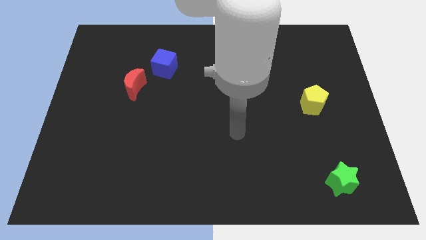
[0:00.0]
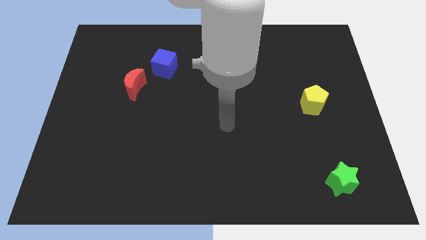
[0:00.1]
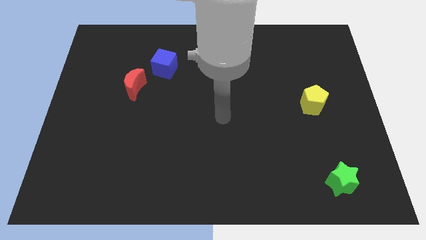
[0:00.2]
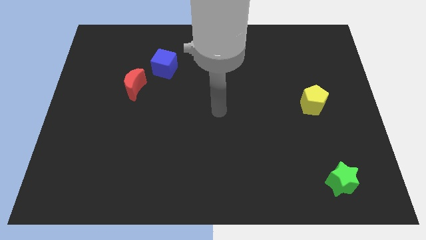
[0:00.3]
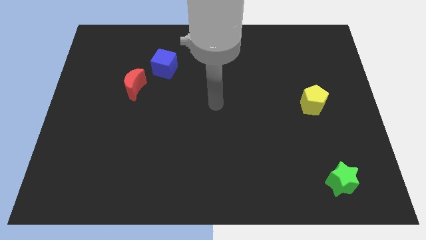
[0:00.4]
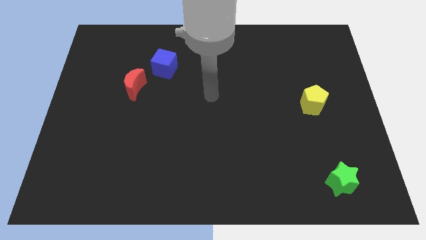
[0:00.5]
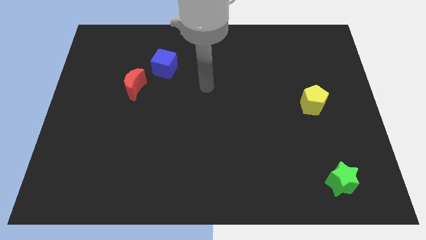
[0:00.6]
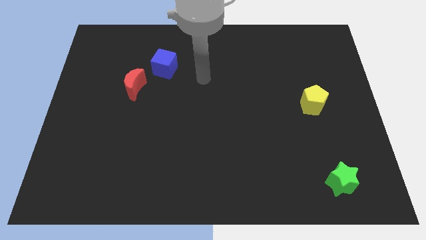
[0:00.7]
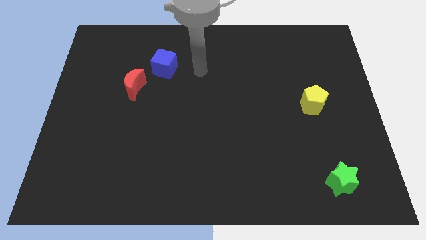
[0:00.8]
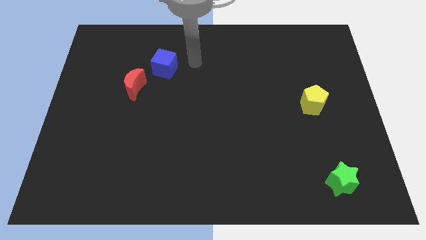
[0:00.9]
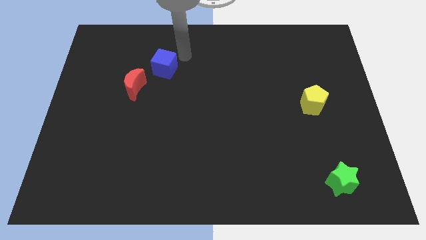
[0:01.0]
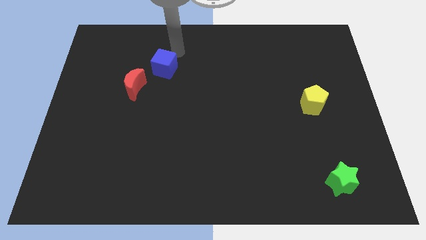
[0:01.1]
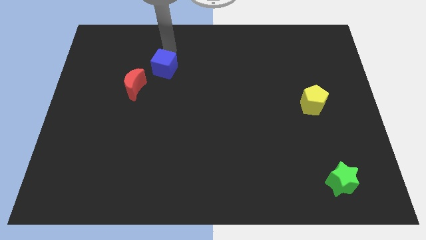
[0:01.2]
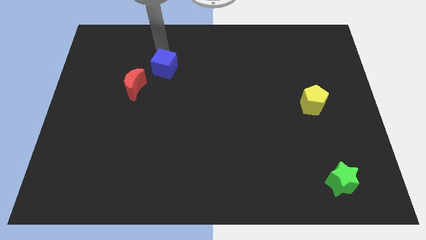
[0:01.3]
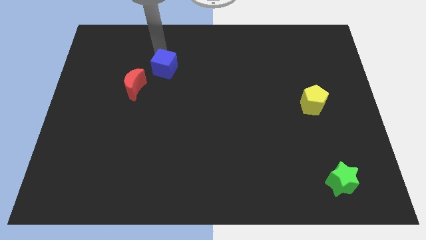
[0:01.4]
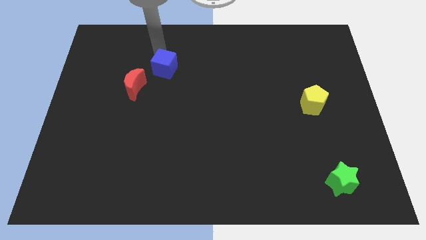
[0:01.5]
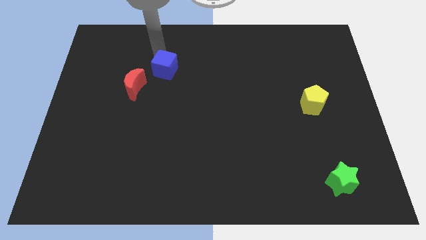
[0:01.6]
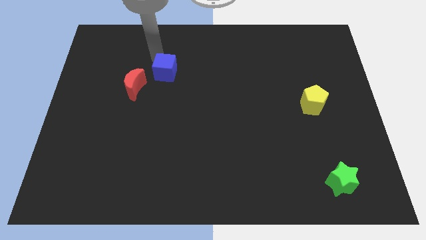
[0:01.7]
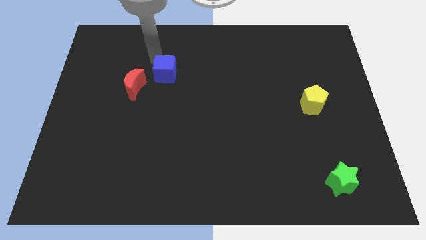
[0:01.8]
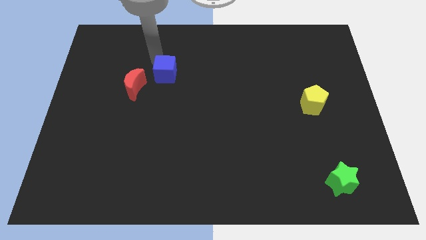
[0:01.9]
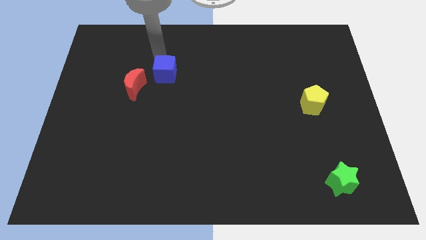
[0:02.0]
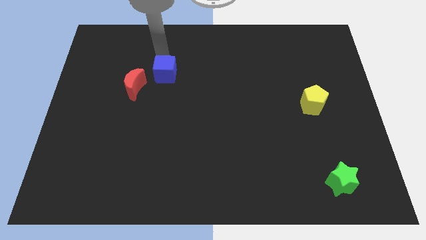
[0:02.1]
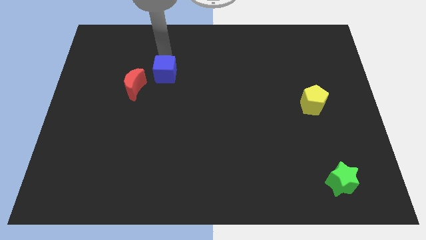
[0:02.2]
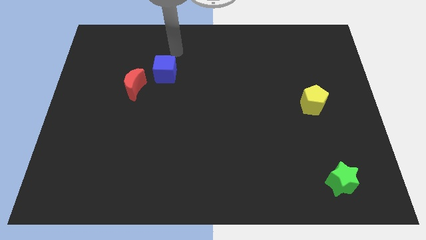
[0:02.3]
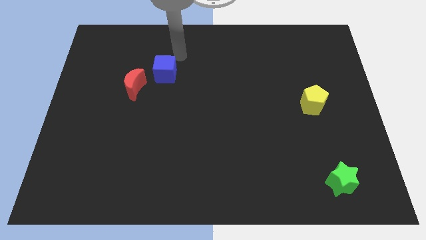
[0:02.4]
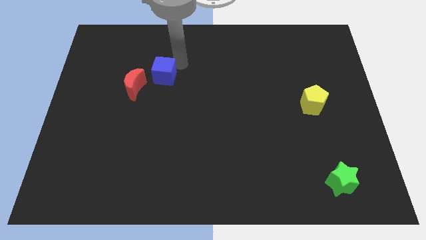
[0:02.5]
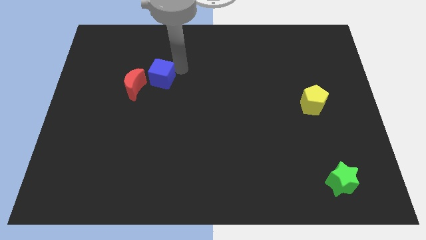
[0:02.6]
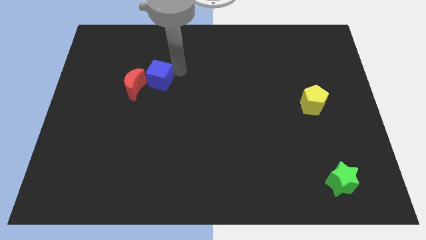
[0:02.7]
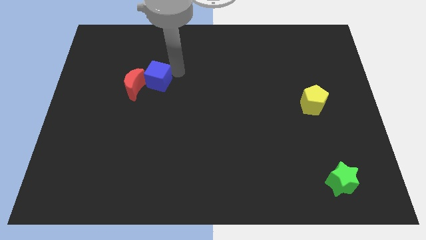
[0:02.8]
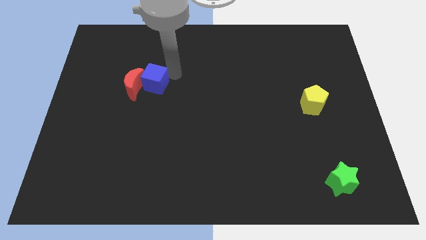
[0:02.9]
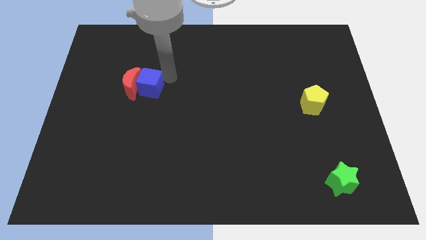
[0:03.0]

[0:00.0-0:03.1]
slide the blue block close to the moon

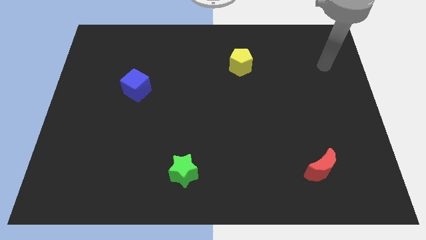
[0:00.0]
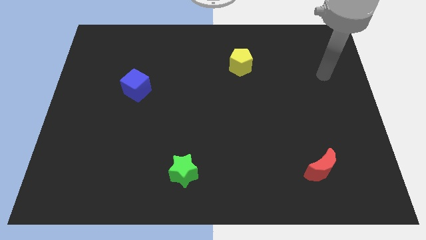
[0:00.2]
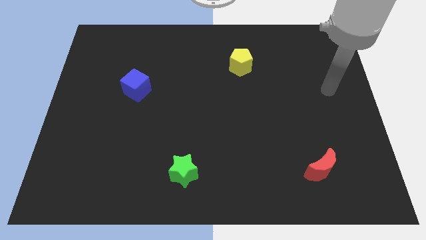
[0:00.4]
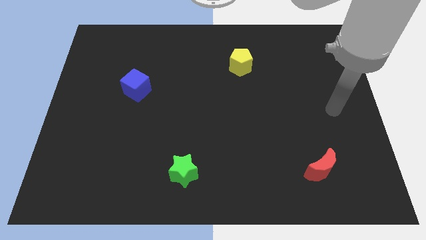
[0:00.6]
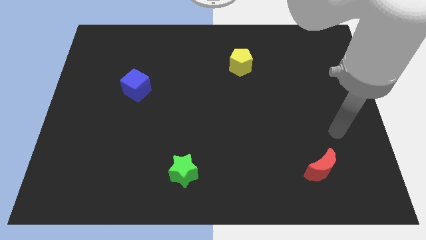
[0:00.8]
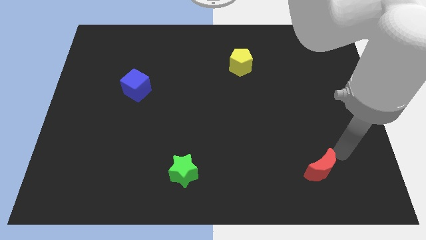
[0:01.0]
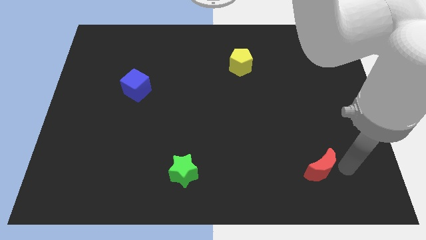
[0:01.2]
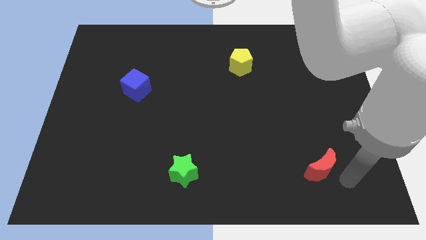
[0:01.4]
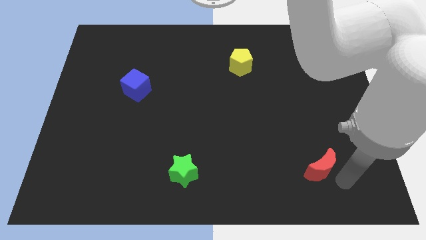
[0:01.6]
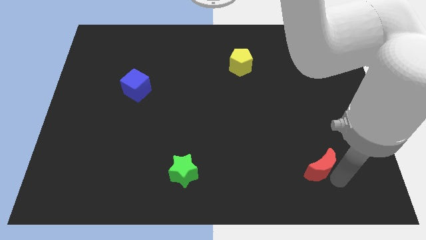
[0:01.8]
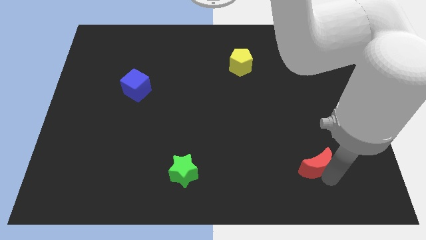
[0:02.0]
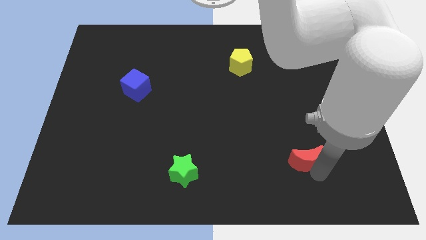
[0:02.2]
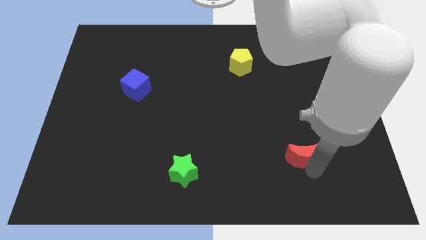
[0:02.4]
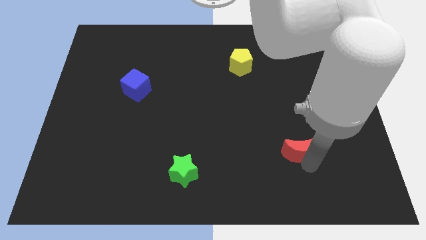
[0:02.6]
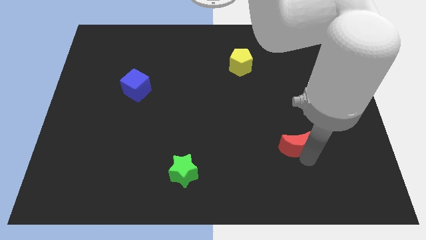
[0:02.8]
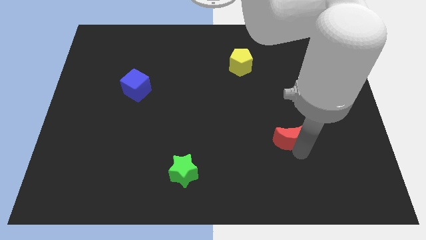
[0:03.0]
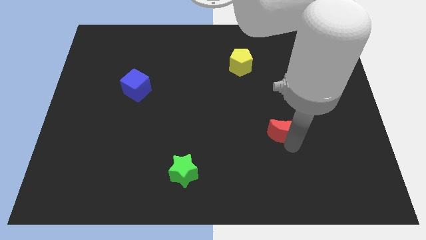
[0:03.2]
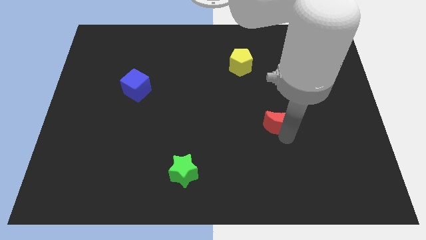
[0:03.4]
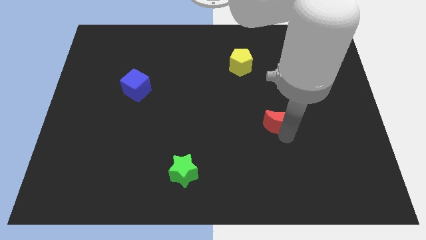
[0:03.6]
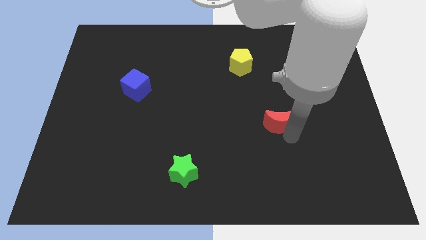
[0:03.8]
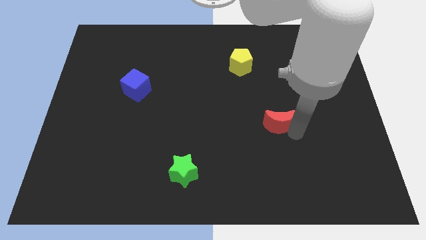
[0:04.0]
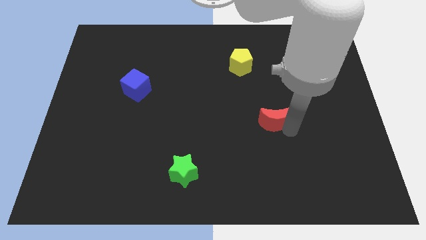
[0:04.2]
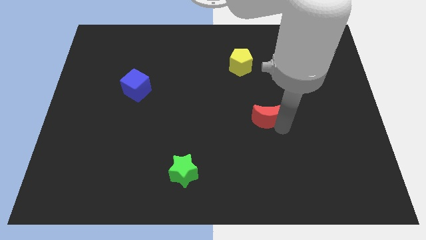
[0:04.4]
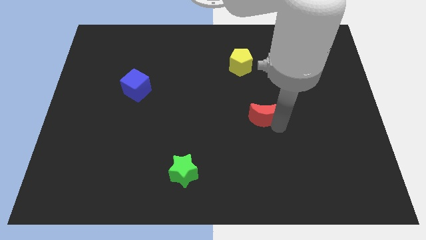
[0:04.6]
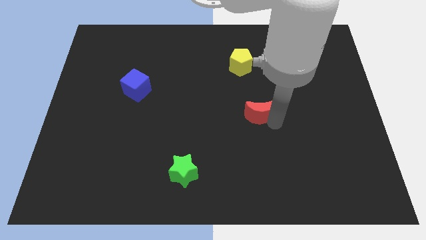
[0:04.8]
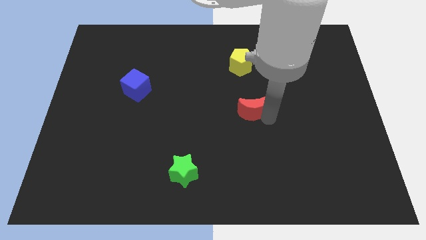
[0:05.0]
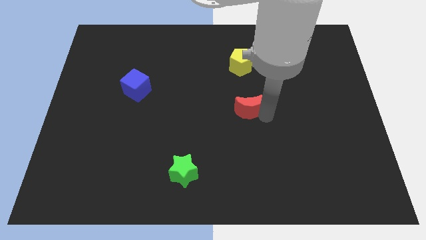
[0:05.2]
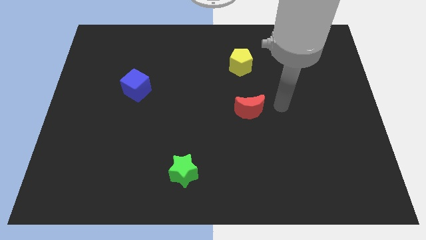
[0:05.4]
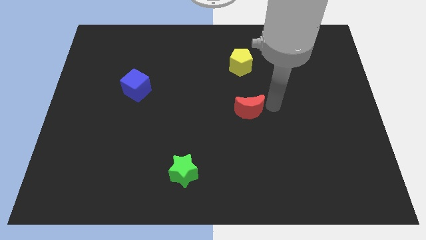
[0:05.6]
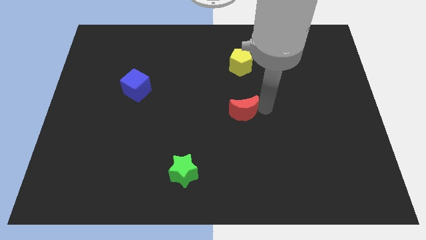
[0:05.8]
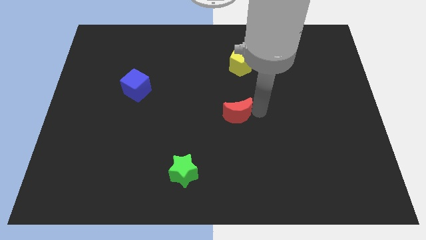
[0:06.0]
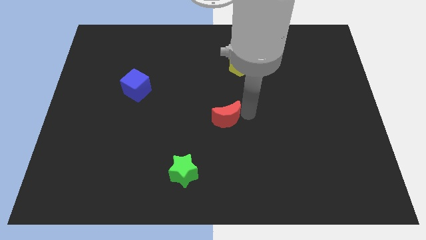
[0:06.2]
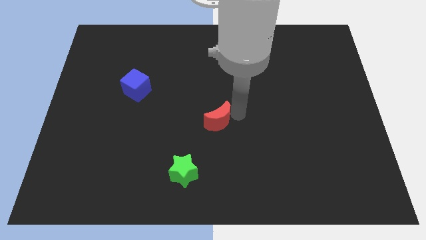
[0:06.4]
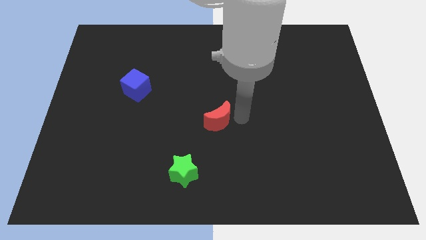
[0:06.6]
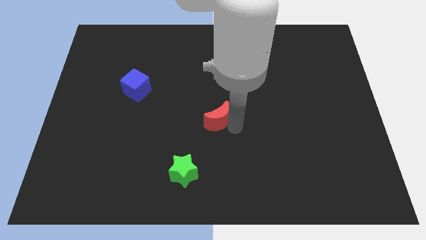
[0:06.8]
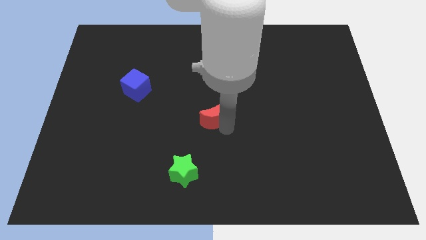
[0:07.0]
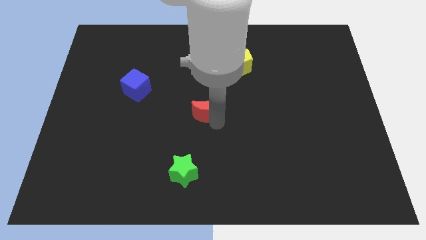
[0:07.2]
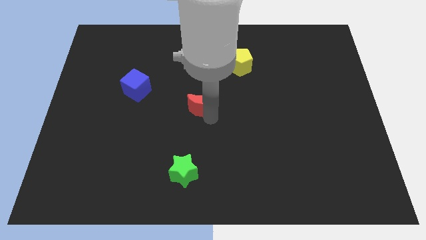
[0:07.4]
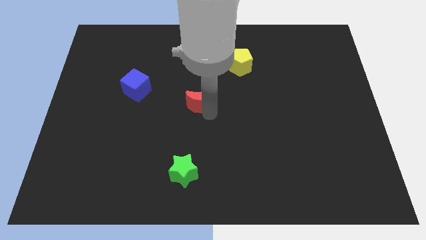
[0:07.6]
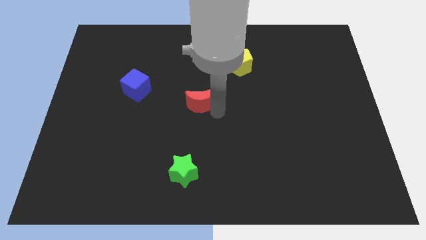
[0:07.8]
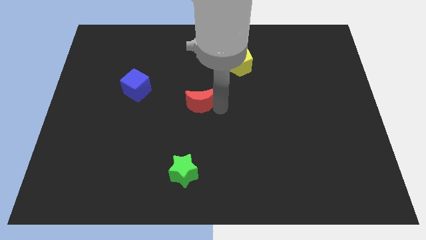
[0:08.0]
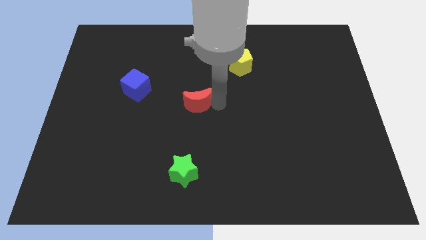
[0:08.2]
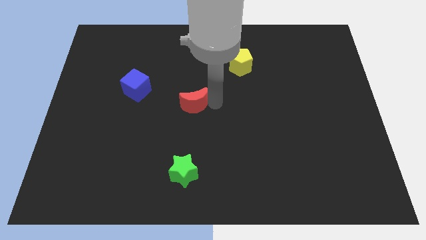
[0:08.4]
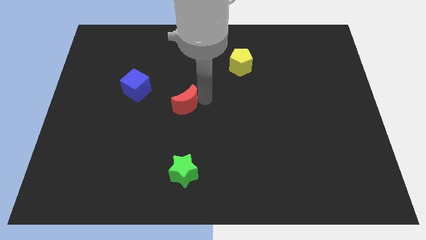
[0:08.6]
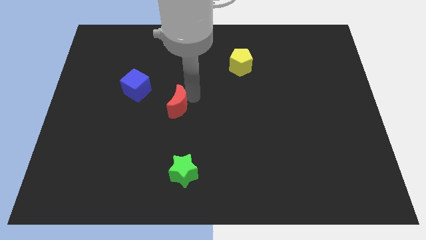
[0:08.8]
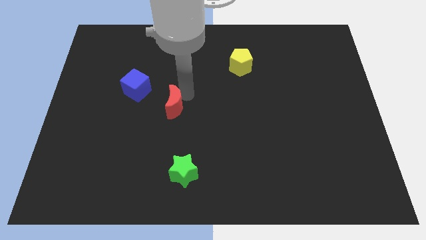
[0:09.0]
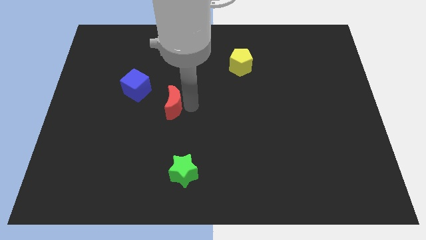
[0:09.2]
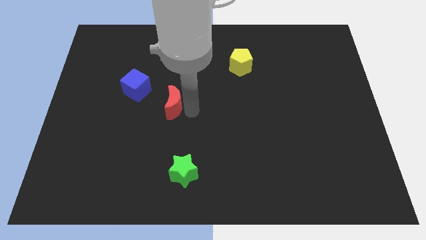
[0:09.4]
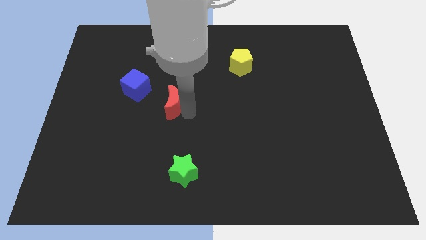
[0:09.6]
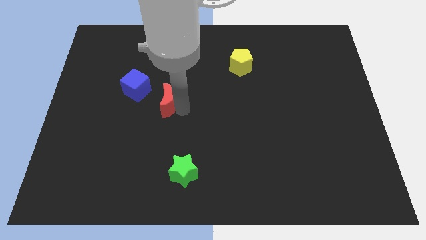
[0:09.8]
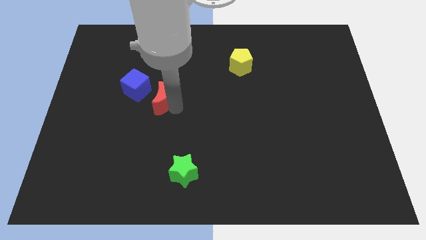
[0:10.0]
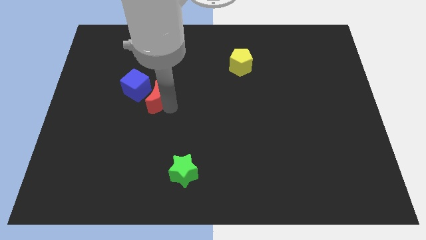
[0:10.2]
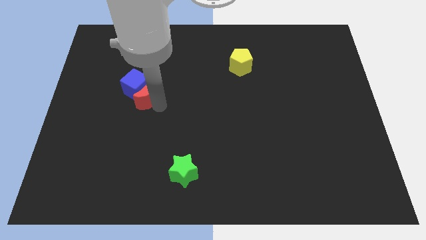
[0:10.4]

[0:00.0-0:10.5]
push the moon towards the blue cube

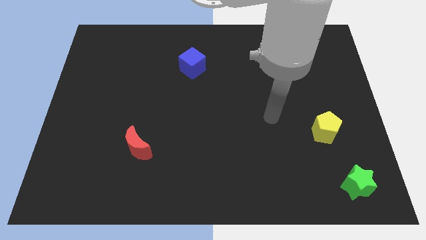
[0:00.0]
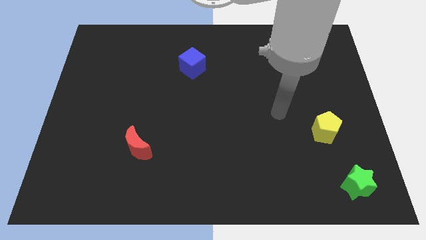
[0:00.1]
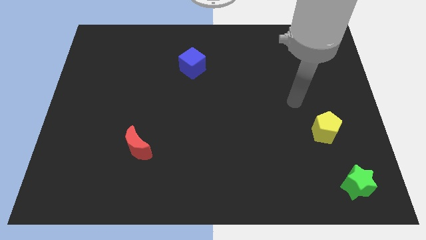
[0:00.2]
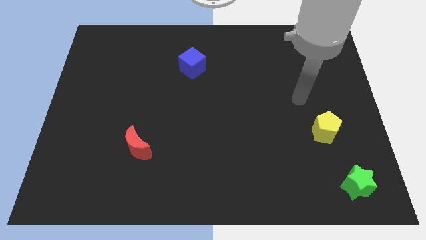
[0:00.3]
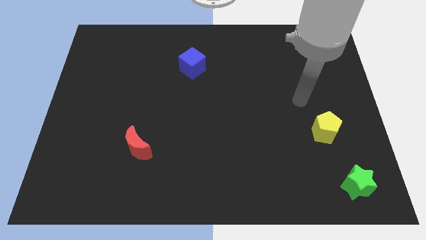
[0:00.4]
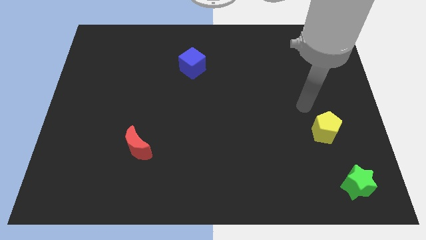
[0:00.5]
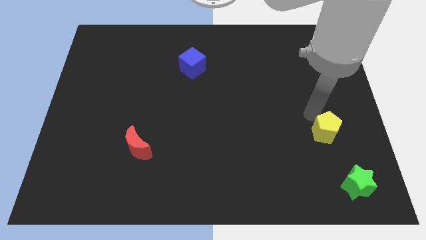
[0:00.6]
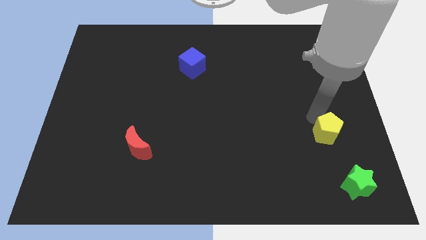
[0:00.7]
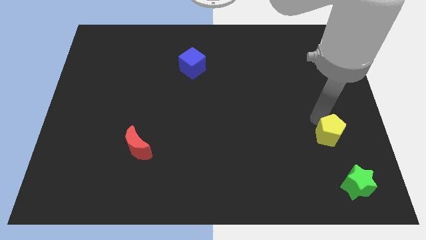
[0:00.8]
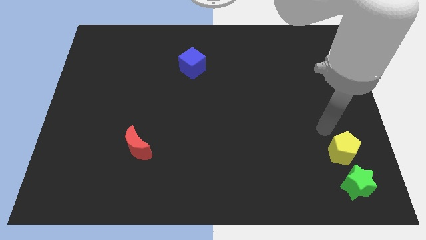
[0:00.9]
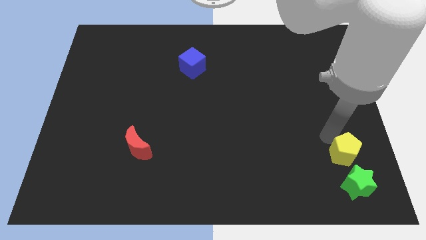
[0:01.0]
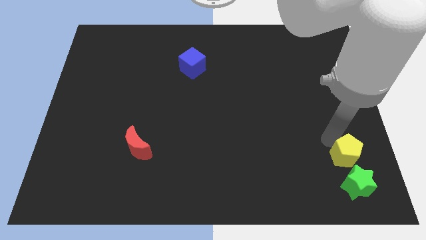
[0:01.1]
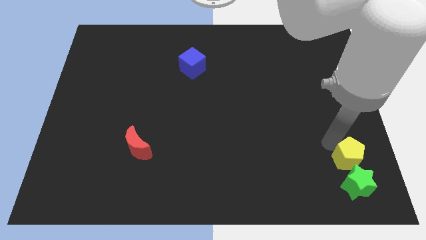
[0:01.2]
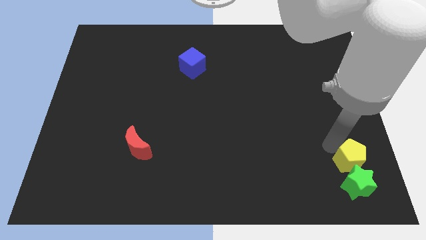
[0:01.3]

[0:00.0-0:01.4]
put the yellow block close to the green block
